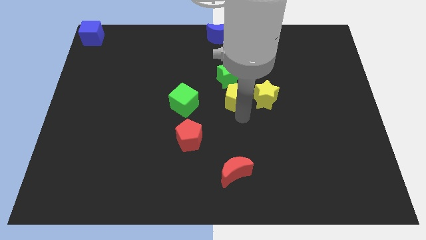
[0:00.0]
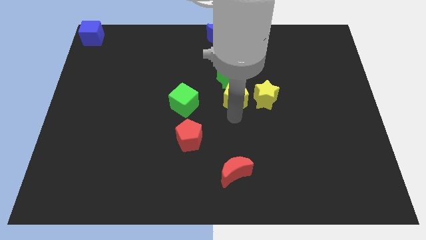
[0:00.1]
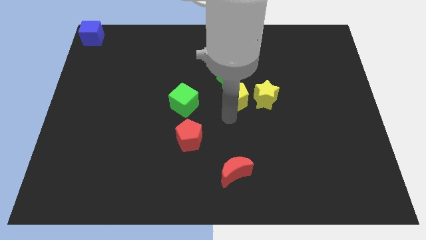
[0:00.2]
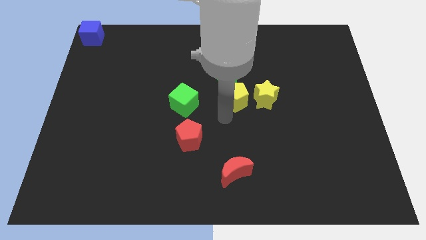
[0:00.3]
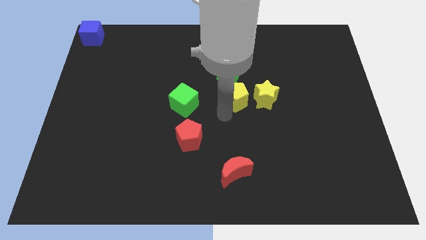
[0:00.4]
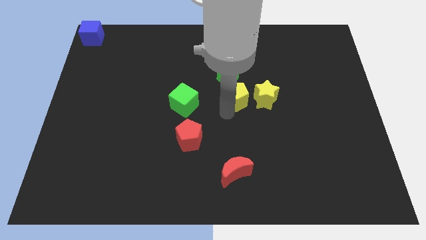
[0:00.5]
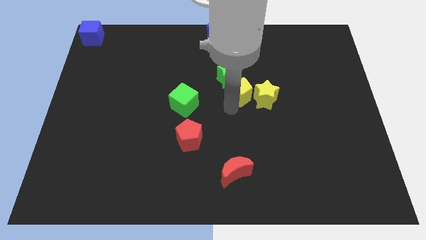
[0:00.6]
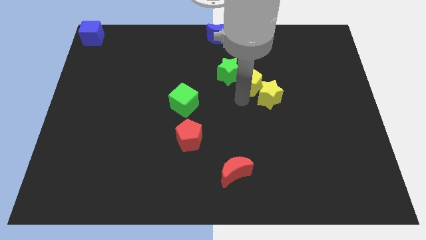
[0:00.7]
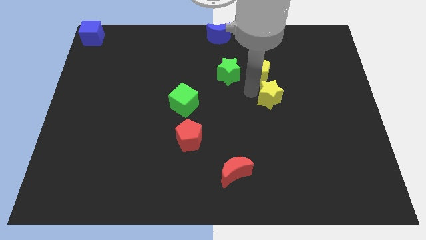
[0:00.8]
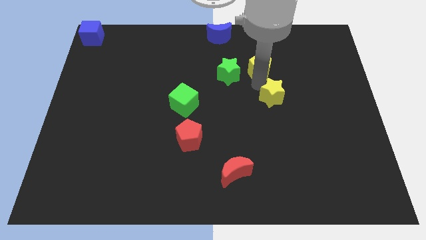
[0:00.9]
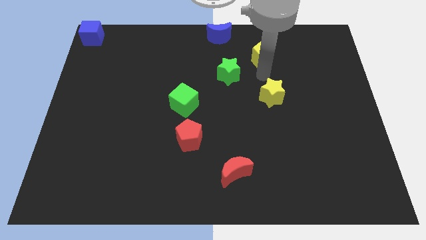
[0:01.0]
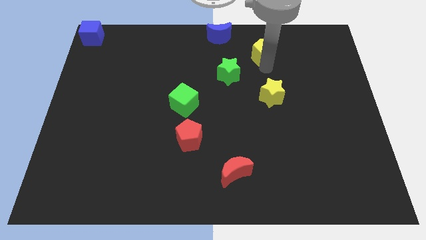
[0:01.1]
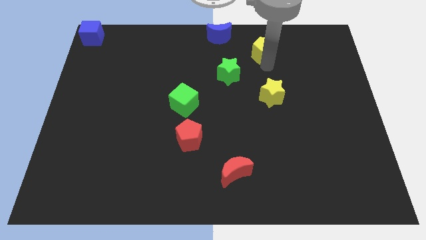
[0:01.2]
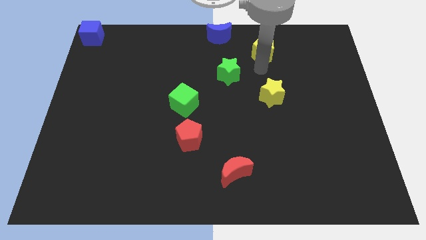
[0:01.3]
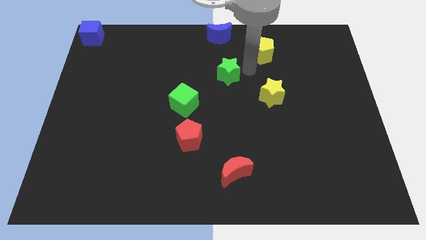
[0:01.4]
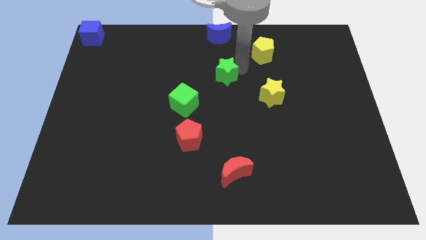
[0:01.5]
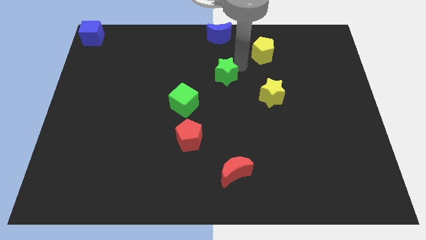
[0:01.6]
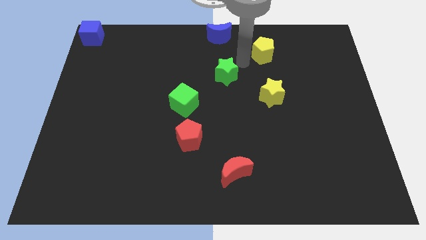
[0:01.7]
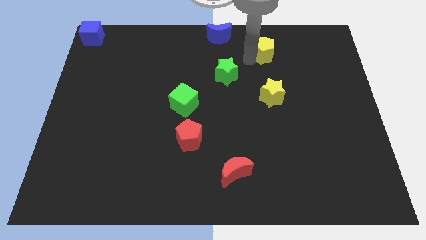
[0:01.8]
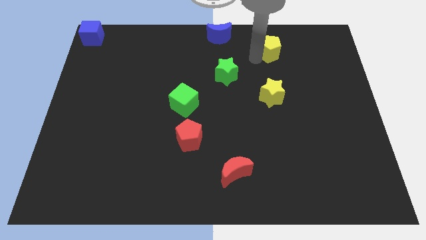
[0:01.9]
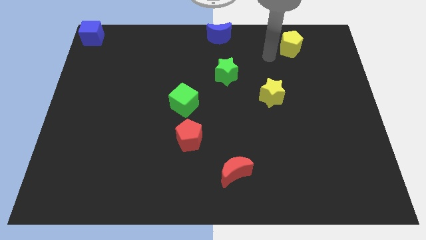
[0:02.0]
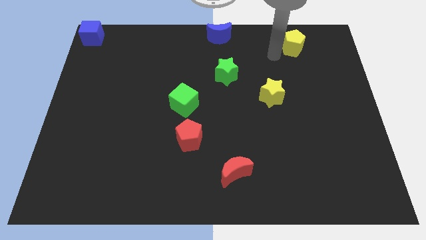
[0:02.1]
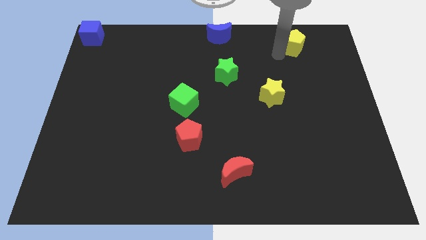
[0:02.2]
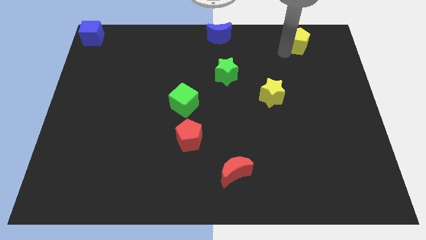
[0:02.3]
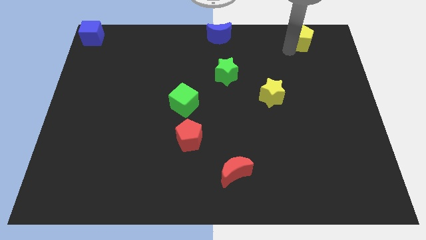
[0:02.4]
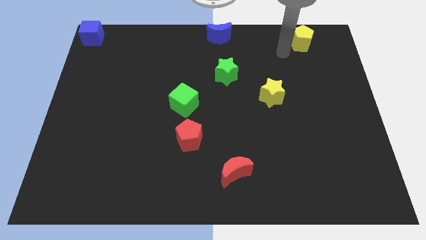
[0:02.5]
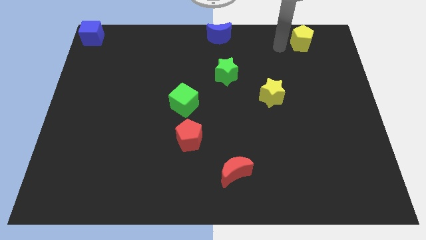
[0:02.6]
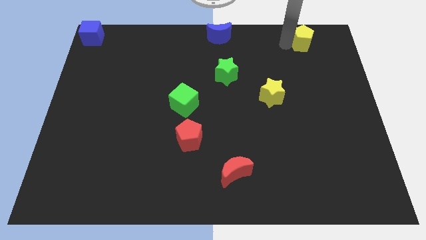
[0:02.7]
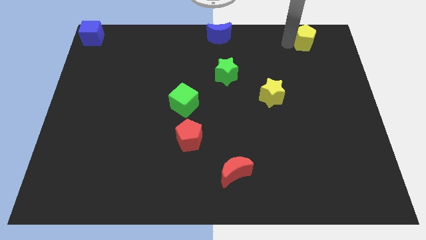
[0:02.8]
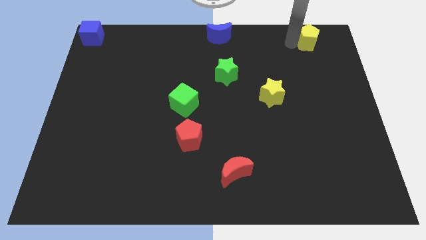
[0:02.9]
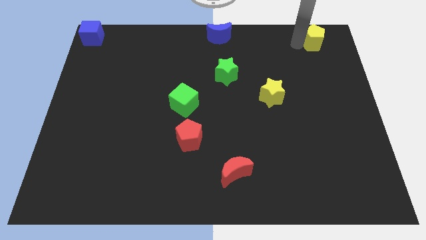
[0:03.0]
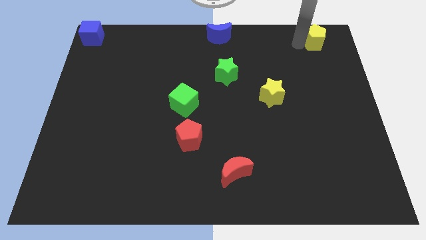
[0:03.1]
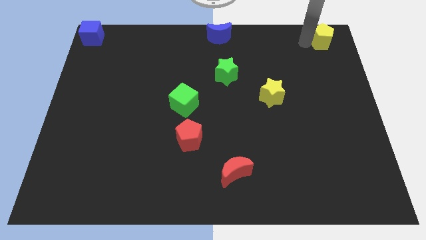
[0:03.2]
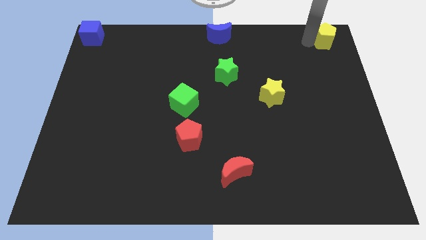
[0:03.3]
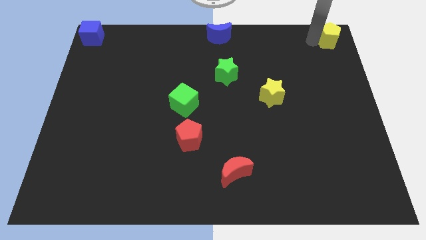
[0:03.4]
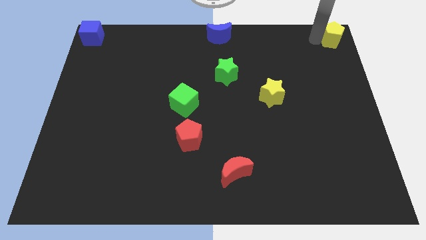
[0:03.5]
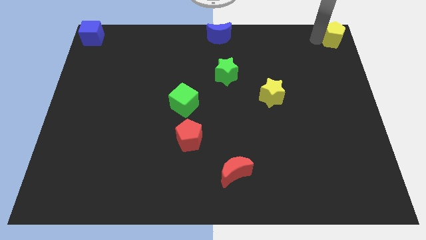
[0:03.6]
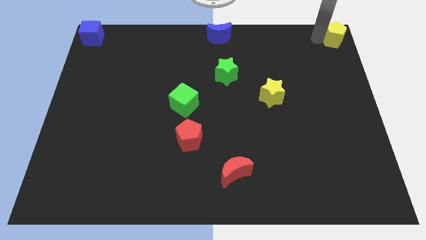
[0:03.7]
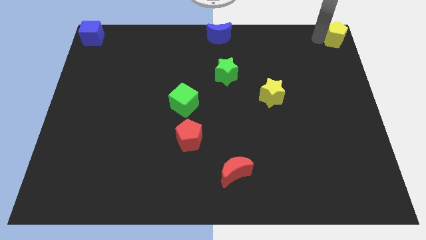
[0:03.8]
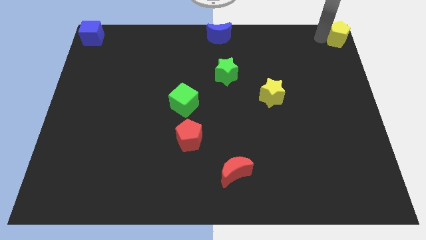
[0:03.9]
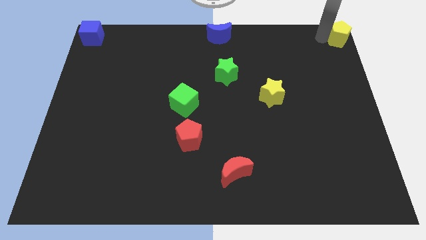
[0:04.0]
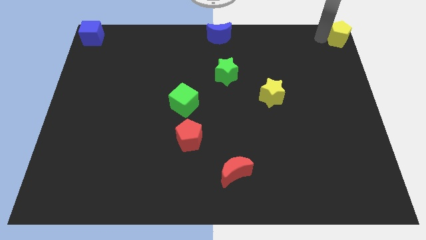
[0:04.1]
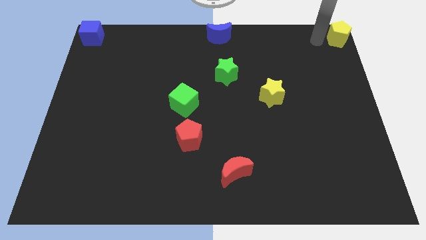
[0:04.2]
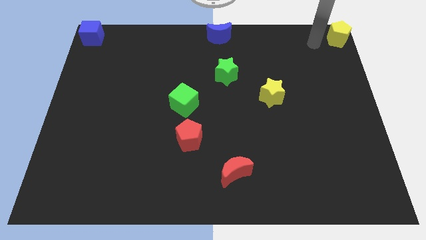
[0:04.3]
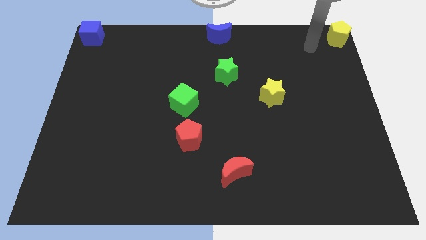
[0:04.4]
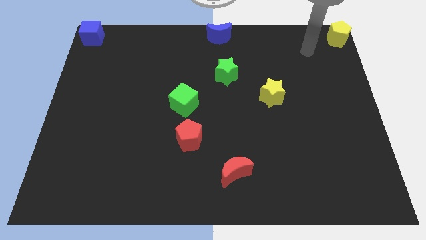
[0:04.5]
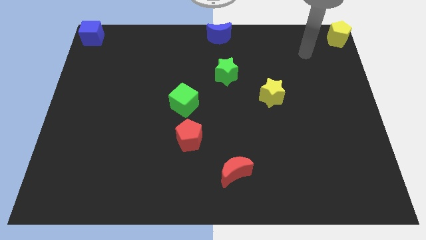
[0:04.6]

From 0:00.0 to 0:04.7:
place the yellow pentagon to the top right corner of the board

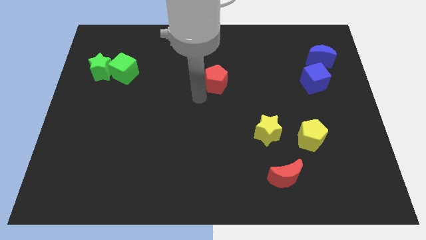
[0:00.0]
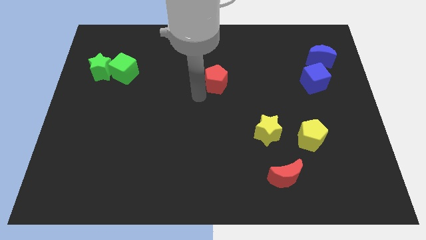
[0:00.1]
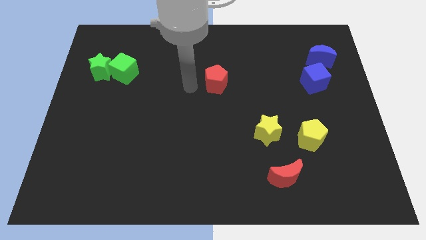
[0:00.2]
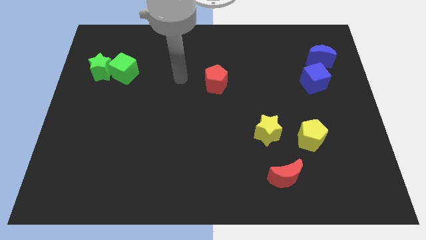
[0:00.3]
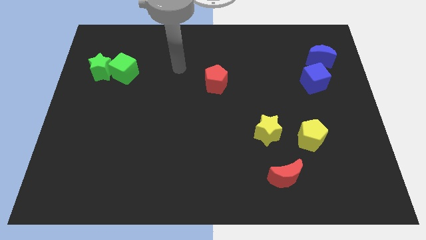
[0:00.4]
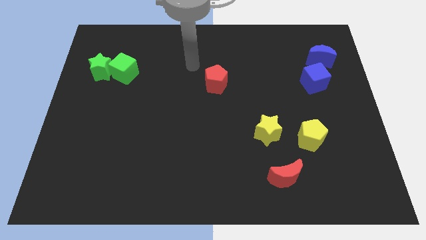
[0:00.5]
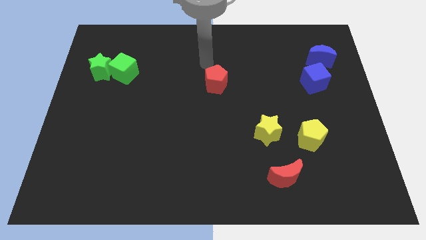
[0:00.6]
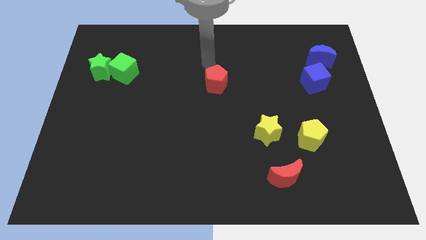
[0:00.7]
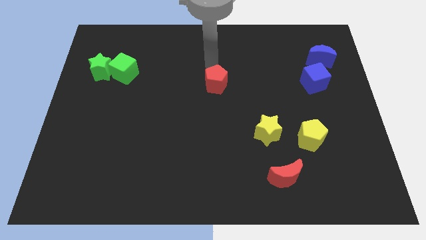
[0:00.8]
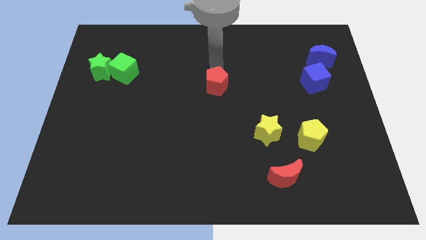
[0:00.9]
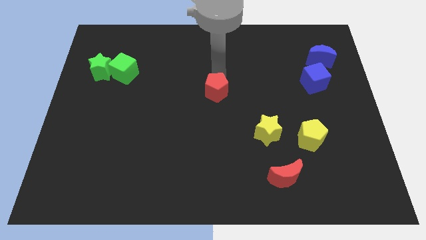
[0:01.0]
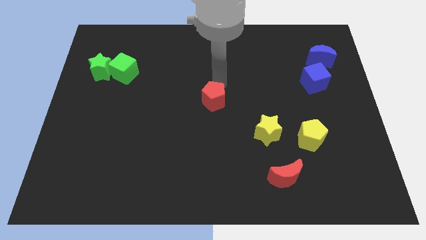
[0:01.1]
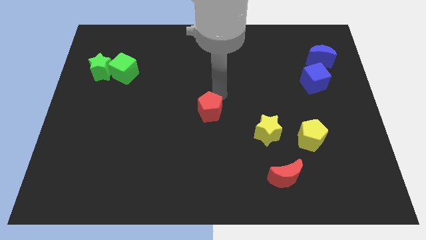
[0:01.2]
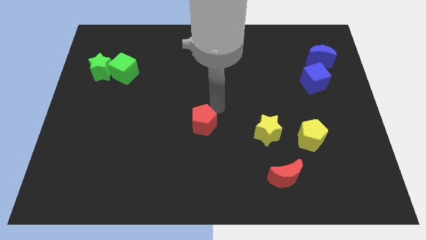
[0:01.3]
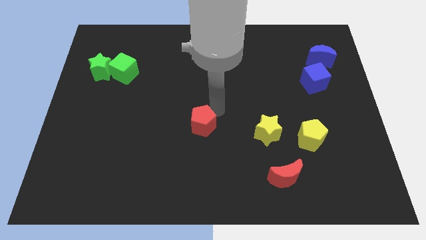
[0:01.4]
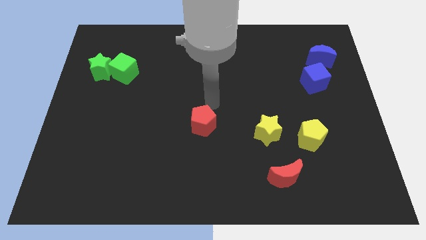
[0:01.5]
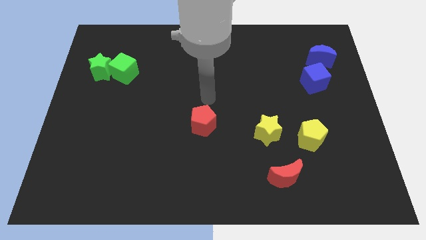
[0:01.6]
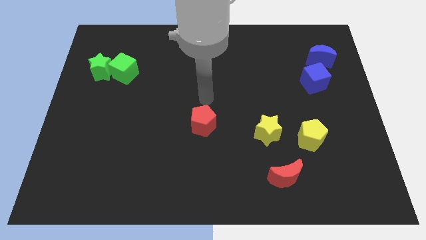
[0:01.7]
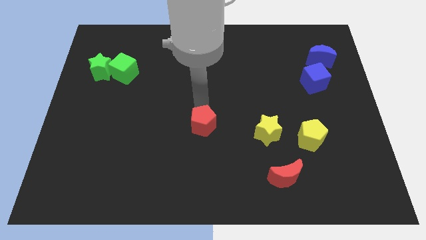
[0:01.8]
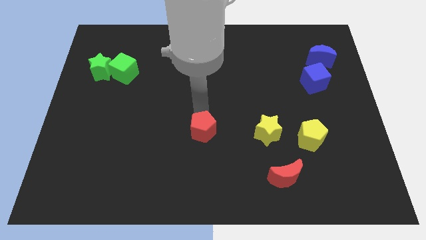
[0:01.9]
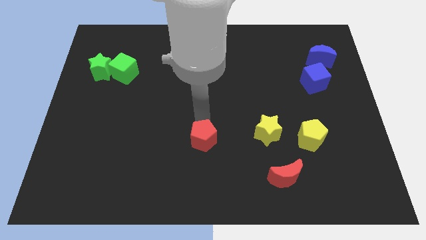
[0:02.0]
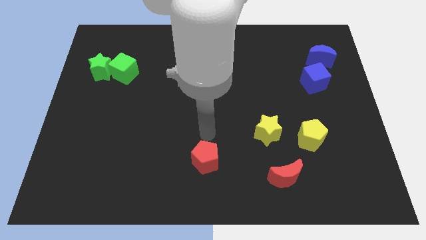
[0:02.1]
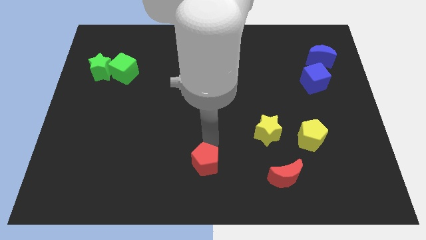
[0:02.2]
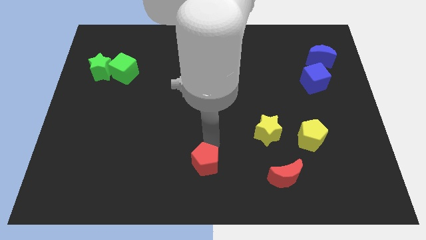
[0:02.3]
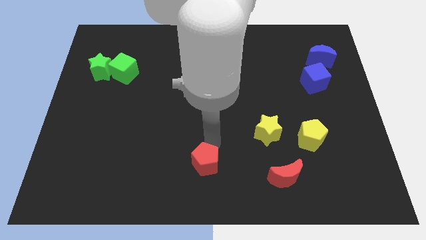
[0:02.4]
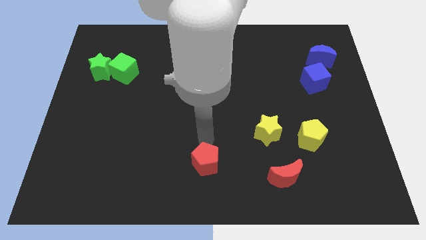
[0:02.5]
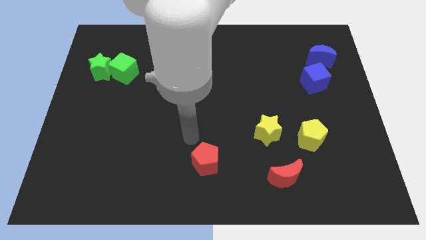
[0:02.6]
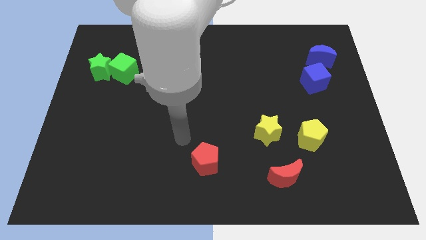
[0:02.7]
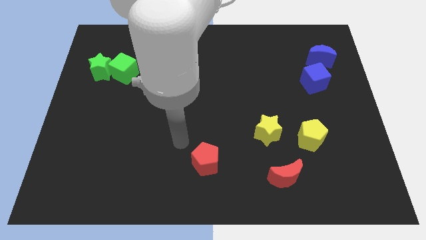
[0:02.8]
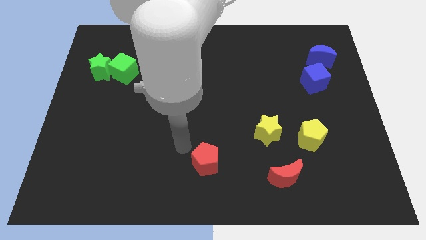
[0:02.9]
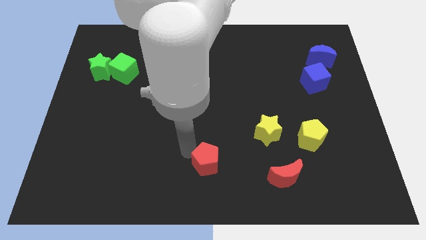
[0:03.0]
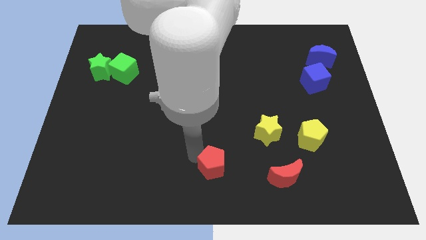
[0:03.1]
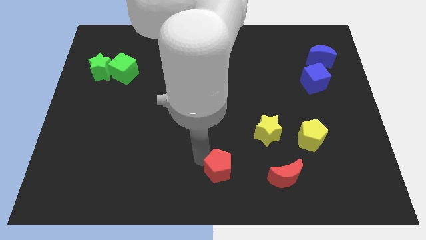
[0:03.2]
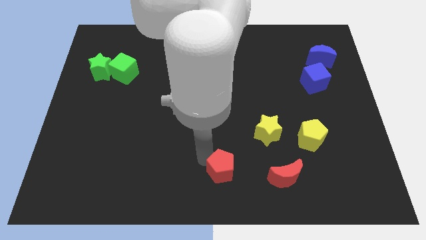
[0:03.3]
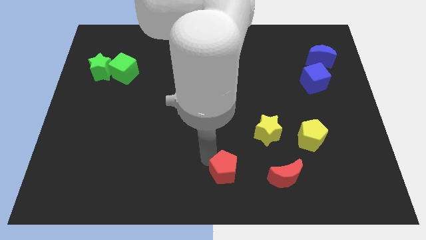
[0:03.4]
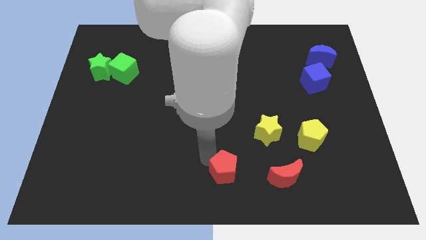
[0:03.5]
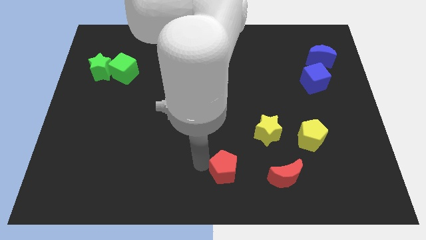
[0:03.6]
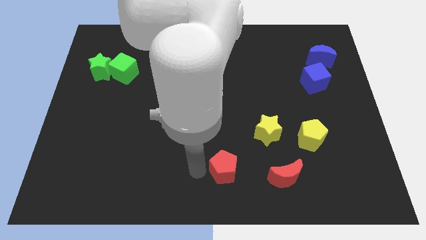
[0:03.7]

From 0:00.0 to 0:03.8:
move the red pentagon to the left side of the red moon

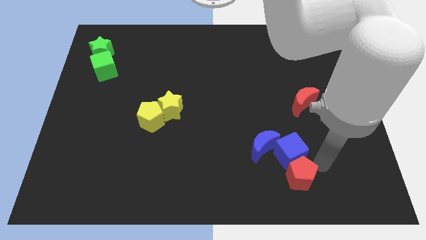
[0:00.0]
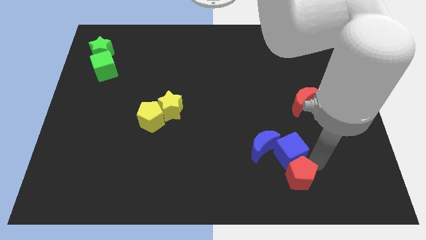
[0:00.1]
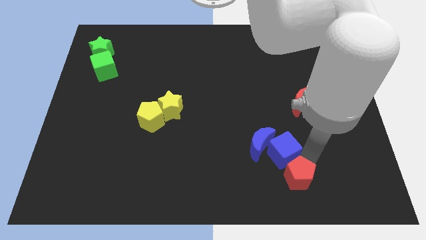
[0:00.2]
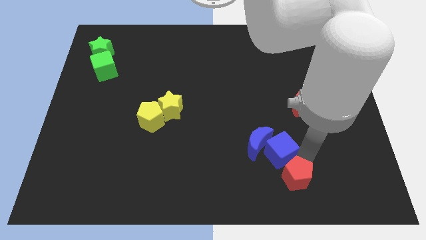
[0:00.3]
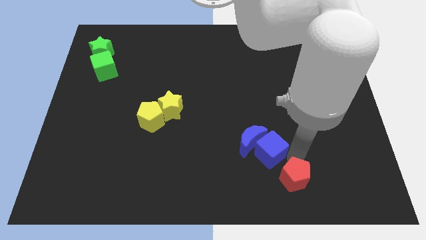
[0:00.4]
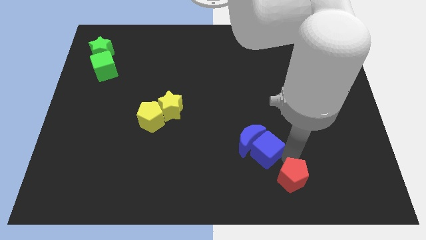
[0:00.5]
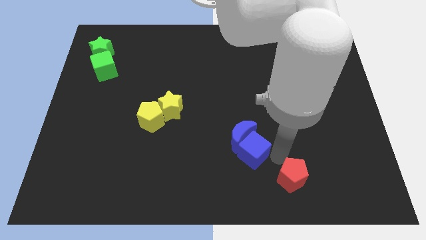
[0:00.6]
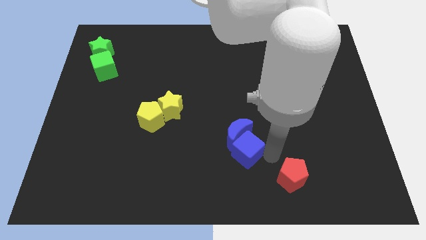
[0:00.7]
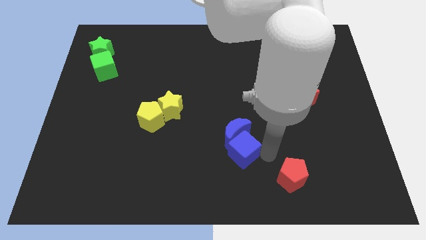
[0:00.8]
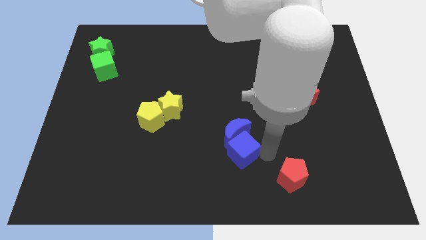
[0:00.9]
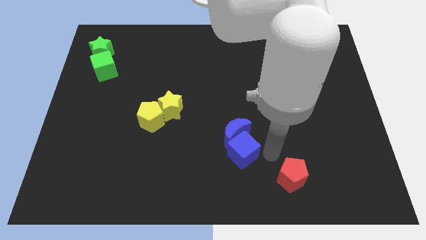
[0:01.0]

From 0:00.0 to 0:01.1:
separate the blue blocks from red pentagon
